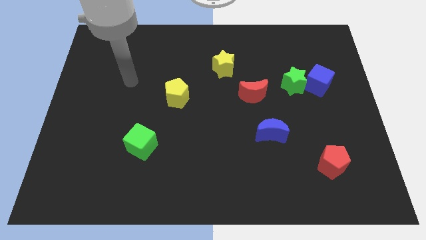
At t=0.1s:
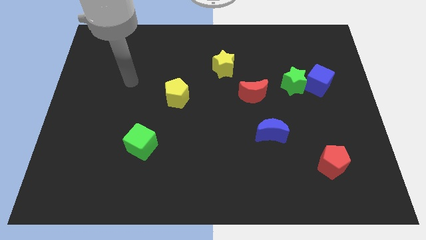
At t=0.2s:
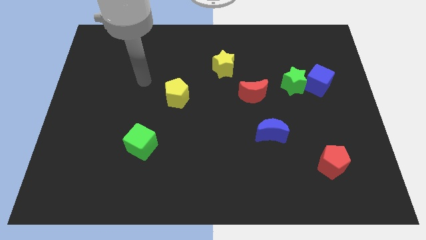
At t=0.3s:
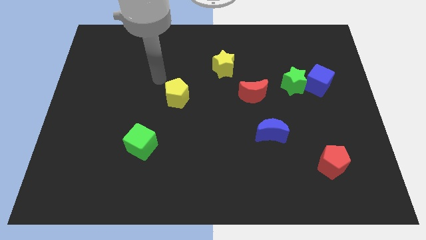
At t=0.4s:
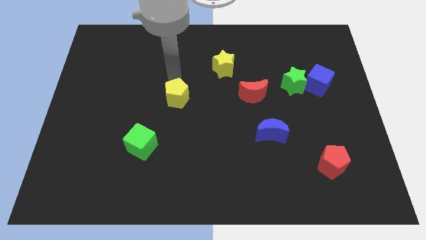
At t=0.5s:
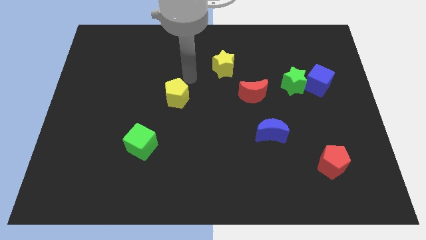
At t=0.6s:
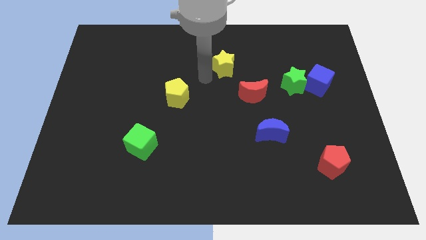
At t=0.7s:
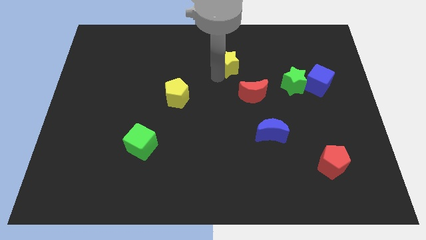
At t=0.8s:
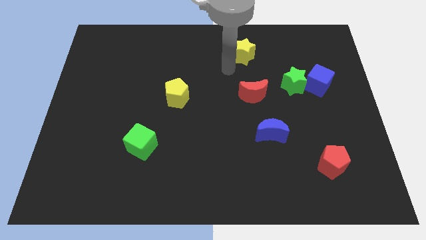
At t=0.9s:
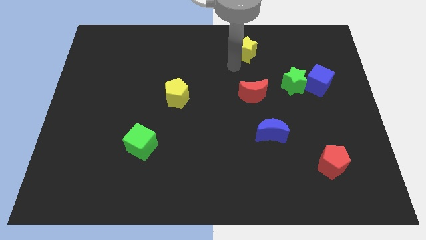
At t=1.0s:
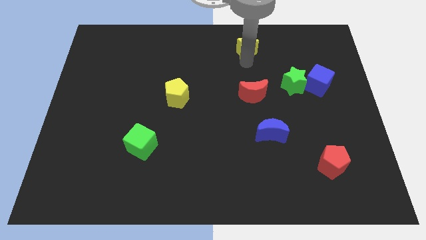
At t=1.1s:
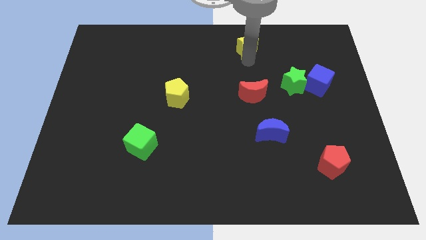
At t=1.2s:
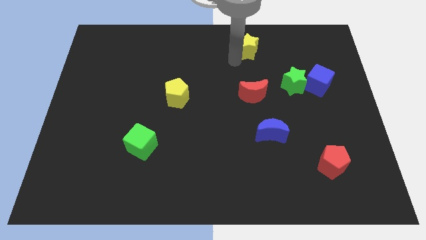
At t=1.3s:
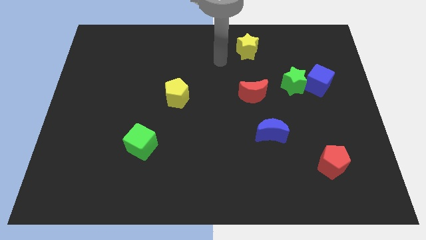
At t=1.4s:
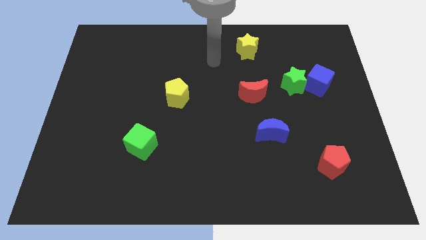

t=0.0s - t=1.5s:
slide the yellow star up slightly

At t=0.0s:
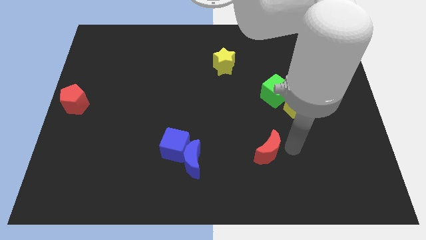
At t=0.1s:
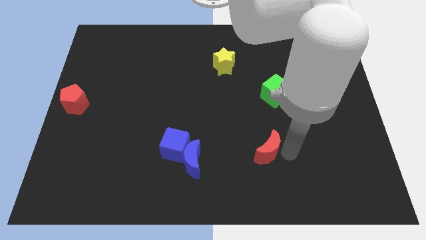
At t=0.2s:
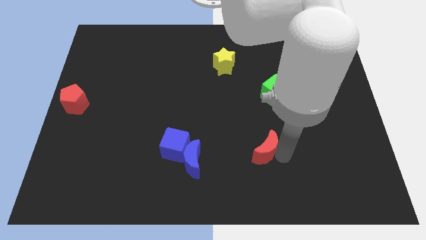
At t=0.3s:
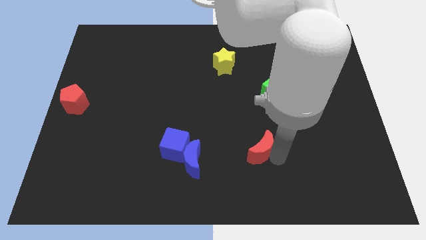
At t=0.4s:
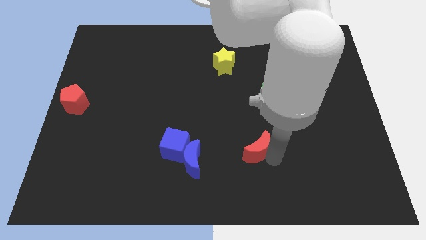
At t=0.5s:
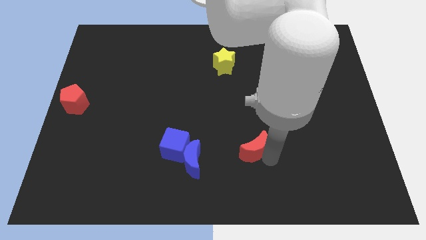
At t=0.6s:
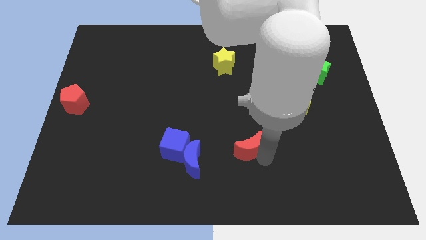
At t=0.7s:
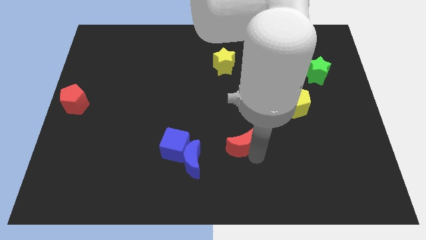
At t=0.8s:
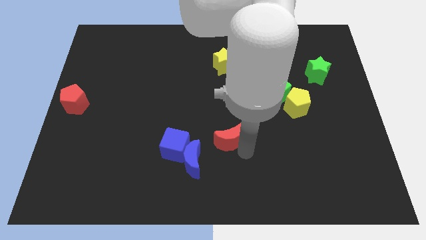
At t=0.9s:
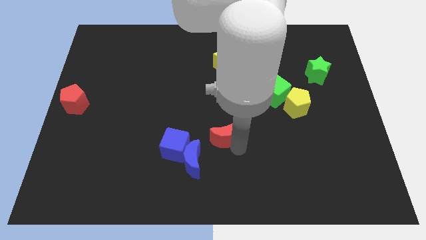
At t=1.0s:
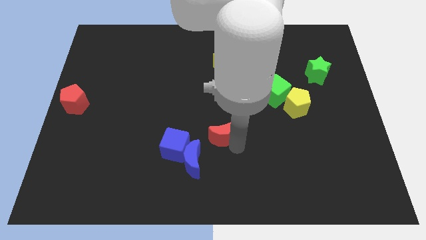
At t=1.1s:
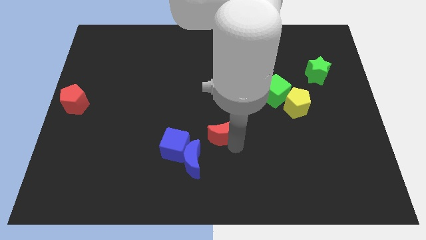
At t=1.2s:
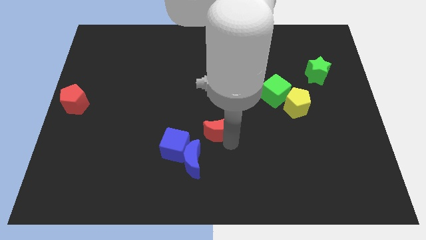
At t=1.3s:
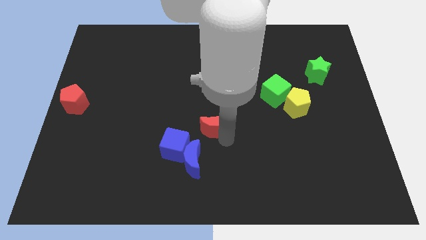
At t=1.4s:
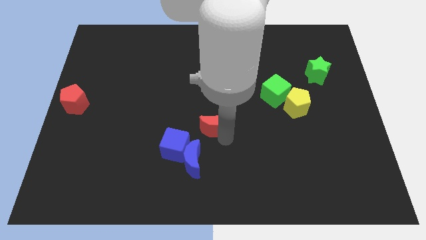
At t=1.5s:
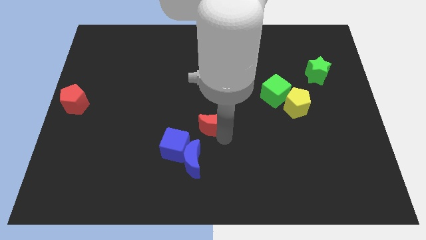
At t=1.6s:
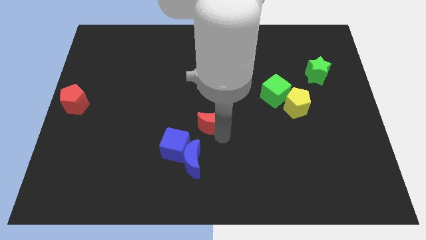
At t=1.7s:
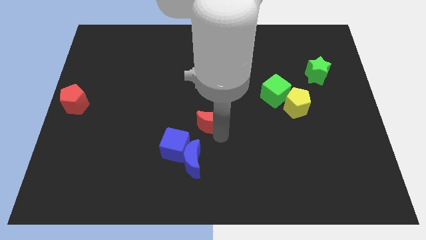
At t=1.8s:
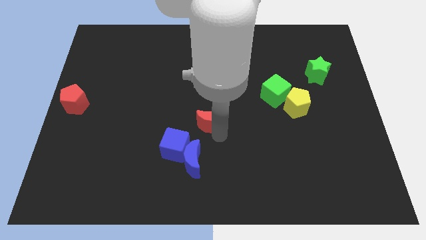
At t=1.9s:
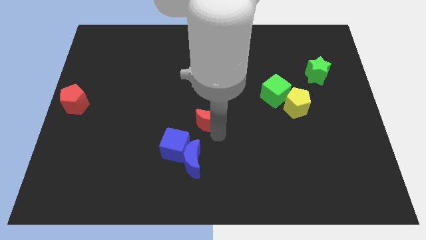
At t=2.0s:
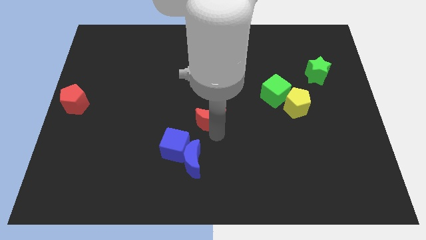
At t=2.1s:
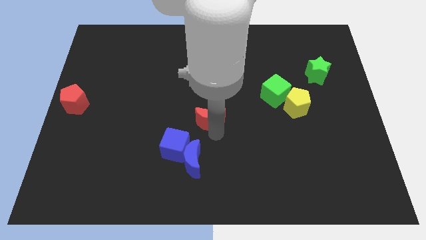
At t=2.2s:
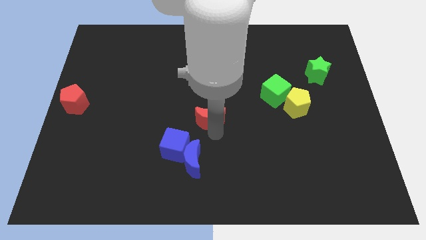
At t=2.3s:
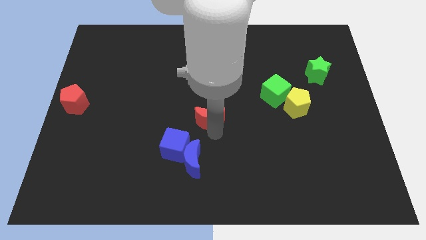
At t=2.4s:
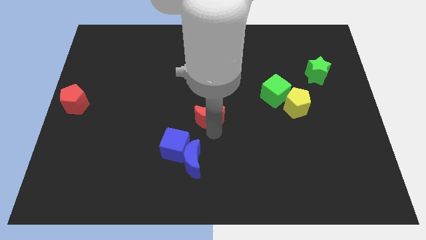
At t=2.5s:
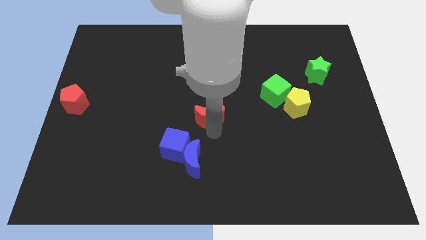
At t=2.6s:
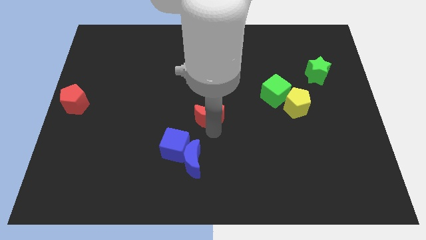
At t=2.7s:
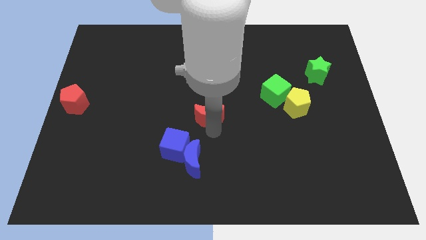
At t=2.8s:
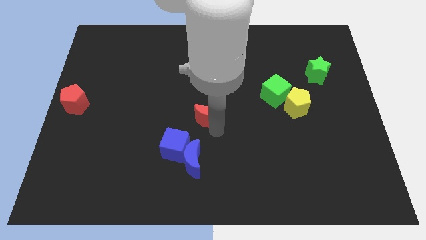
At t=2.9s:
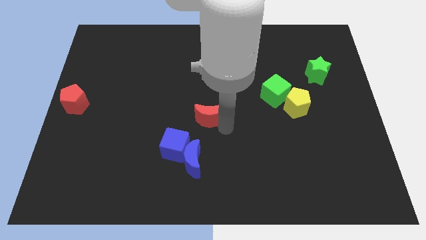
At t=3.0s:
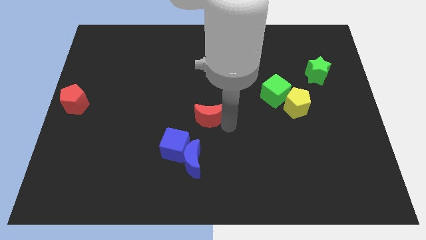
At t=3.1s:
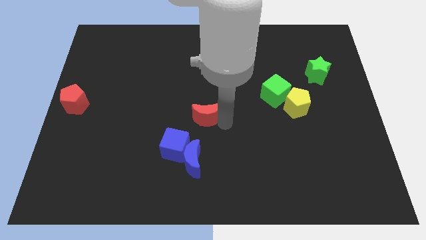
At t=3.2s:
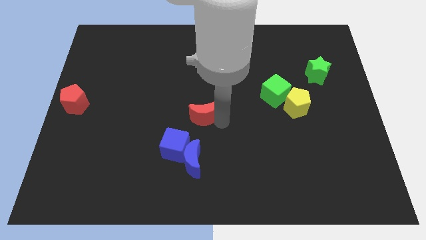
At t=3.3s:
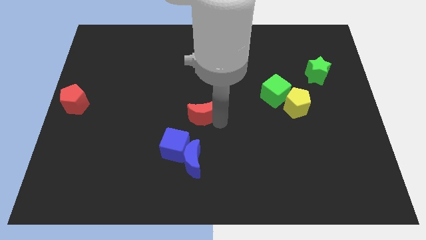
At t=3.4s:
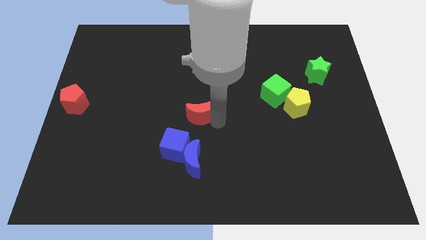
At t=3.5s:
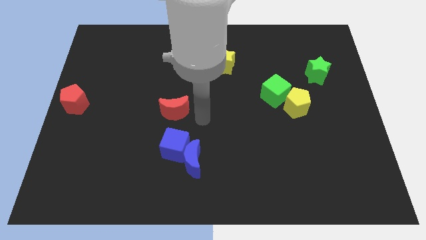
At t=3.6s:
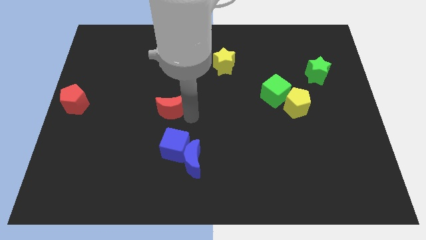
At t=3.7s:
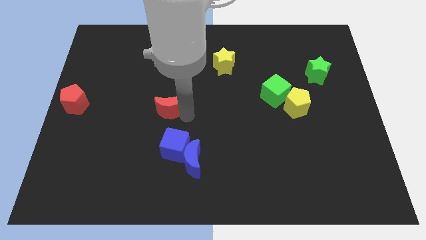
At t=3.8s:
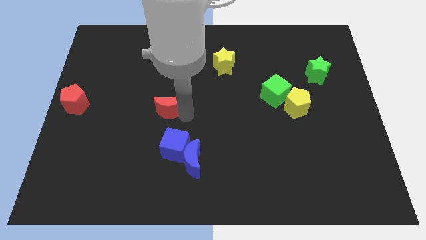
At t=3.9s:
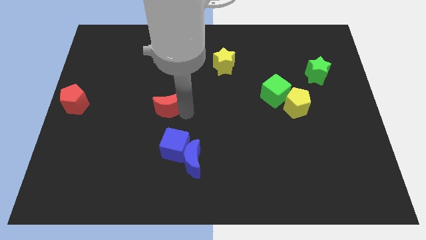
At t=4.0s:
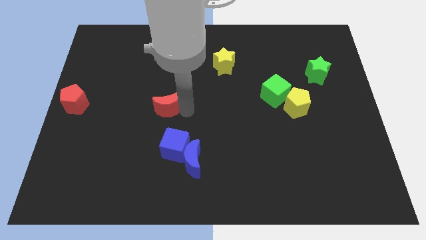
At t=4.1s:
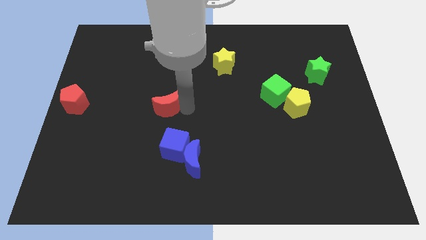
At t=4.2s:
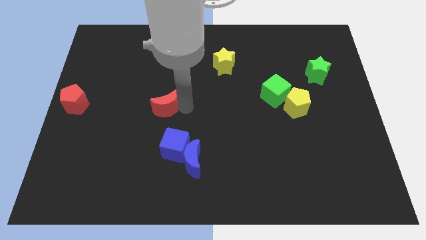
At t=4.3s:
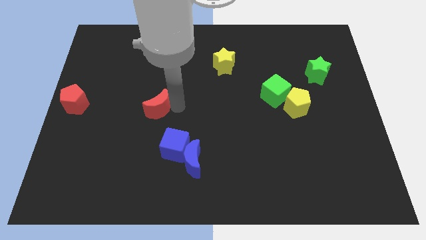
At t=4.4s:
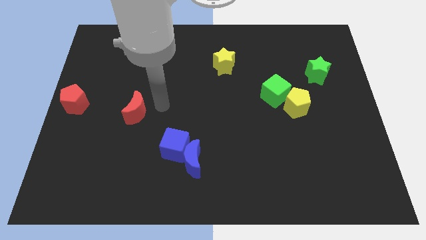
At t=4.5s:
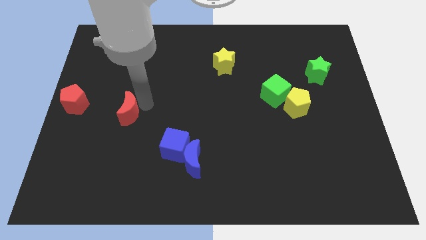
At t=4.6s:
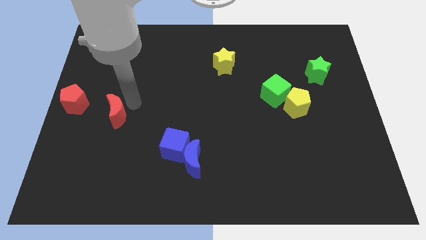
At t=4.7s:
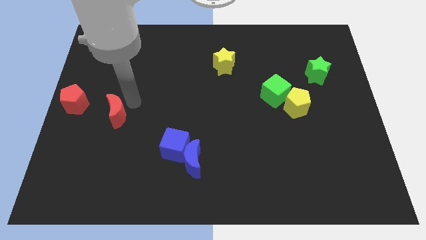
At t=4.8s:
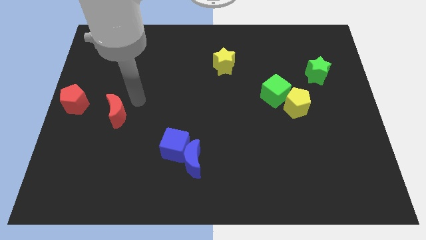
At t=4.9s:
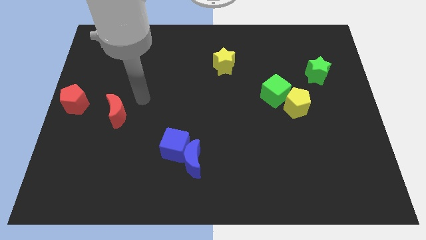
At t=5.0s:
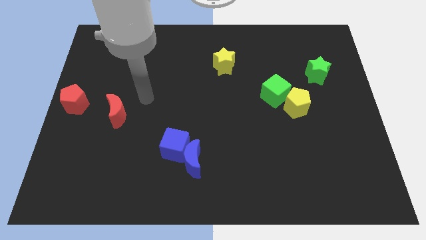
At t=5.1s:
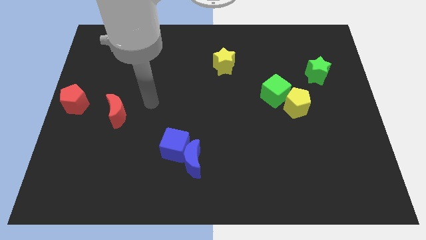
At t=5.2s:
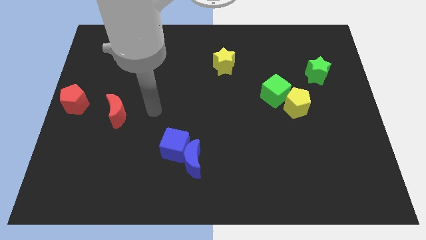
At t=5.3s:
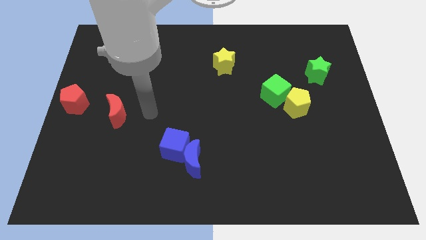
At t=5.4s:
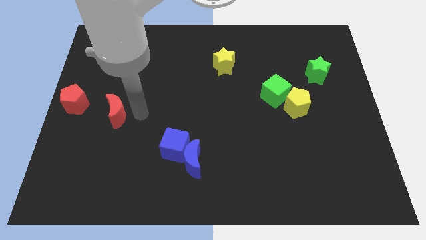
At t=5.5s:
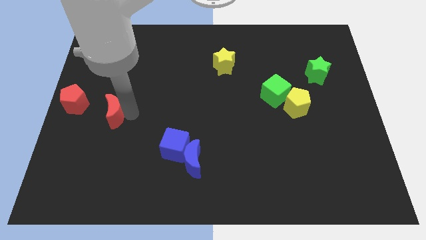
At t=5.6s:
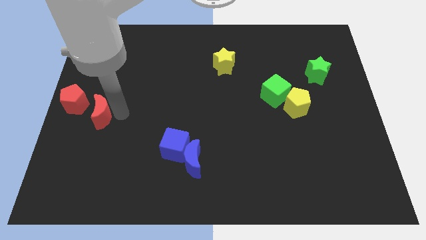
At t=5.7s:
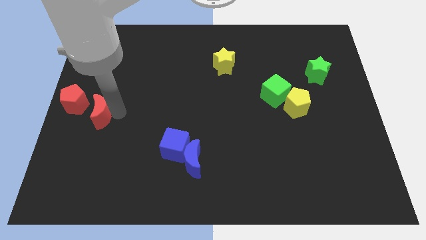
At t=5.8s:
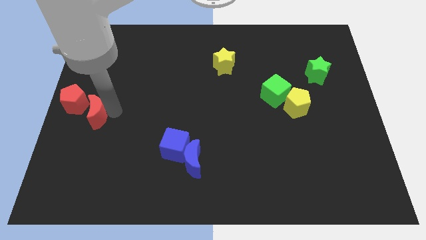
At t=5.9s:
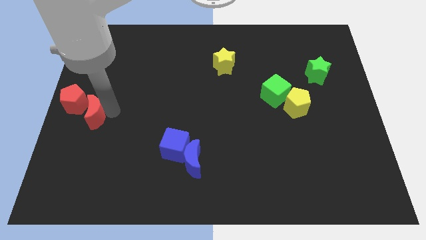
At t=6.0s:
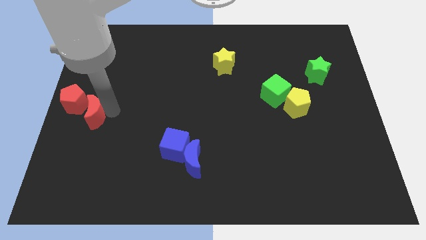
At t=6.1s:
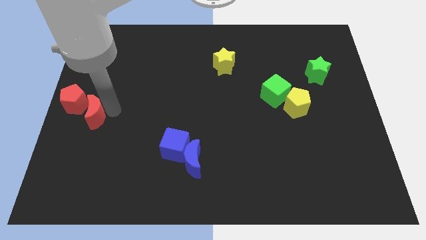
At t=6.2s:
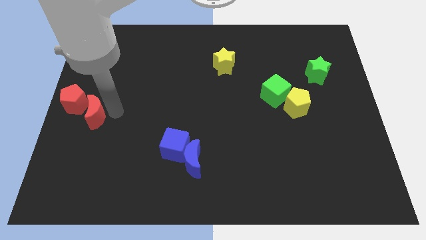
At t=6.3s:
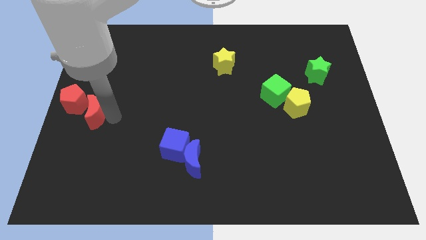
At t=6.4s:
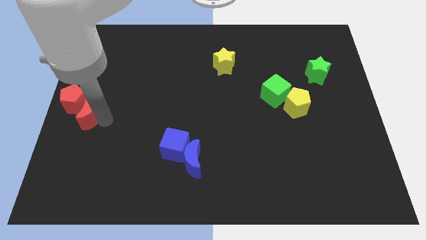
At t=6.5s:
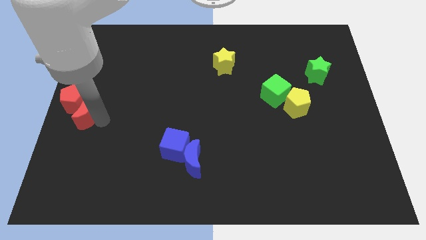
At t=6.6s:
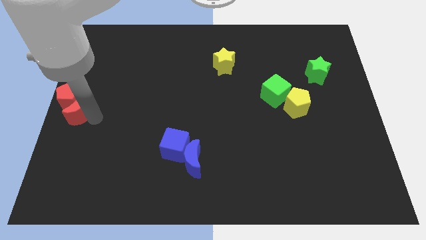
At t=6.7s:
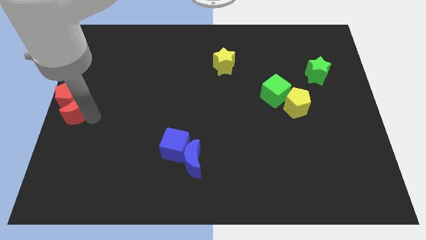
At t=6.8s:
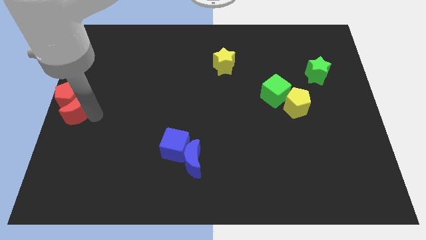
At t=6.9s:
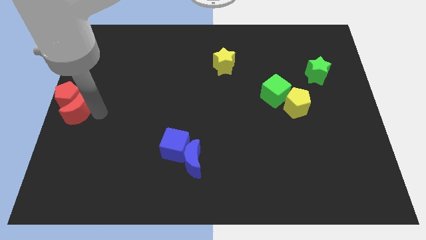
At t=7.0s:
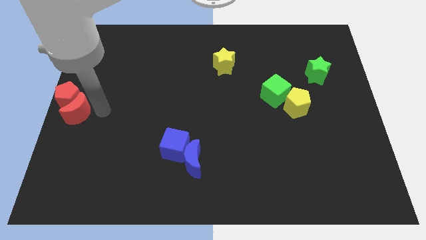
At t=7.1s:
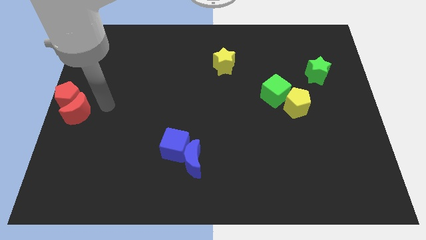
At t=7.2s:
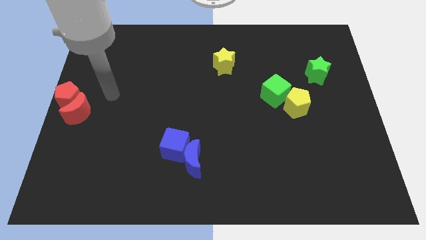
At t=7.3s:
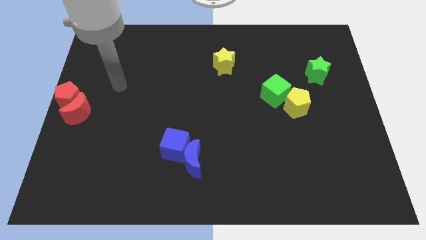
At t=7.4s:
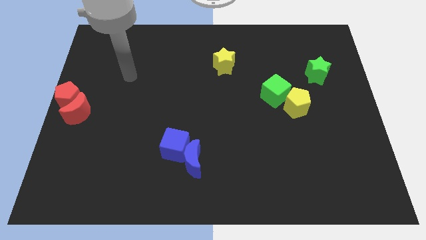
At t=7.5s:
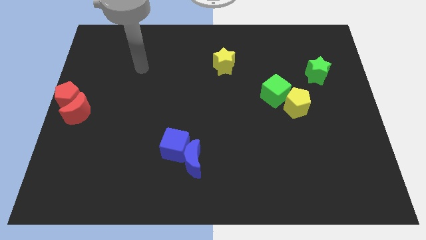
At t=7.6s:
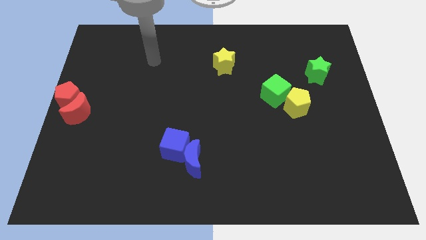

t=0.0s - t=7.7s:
push the red moon into the red pentagon
